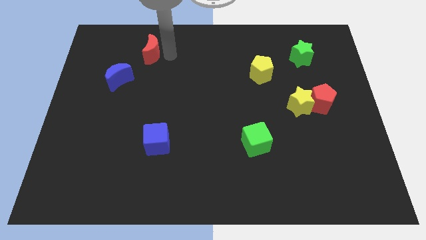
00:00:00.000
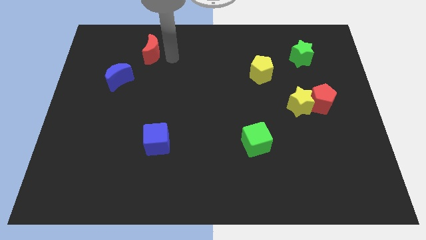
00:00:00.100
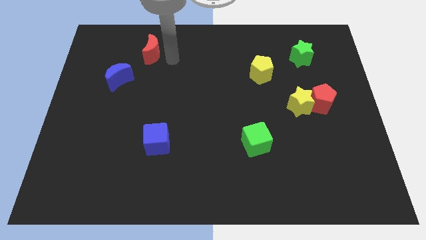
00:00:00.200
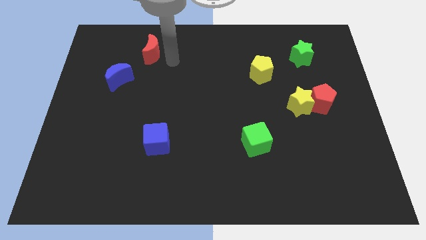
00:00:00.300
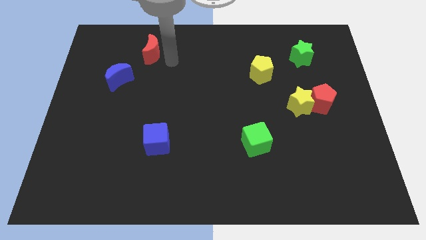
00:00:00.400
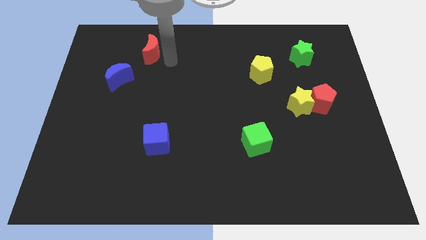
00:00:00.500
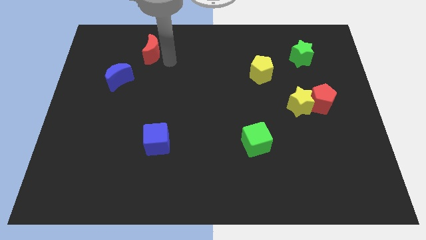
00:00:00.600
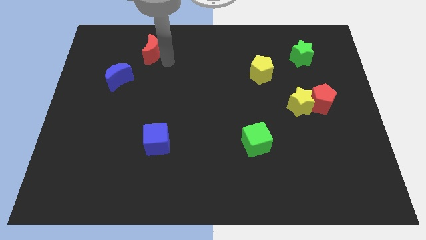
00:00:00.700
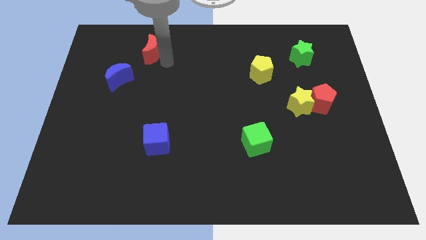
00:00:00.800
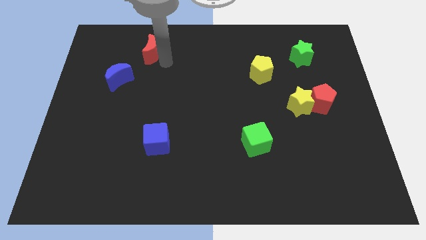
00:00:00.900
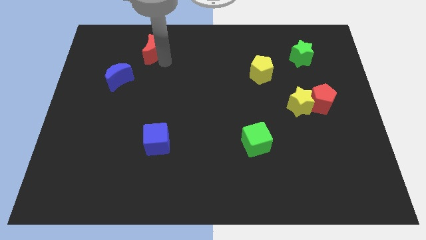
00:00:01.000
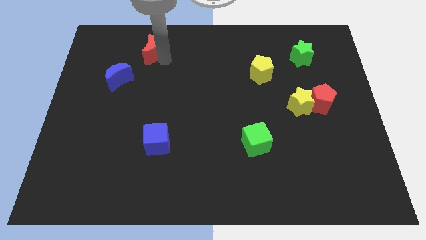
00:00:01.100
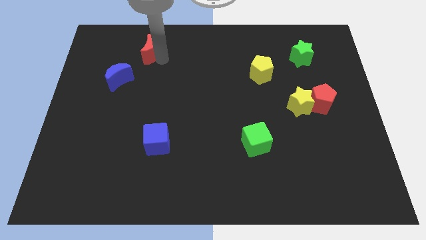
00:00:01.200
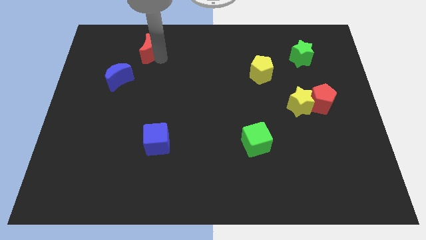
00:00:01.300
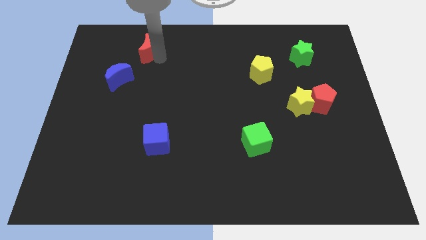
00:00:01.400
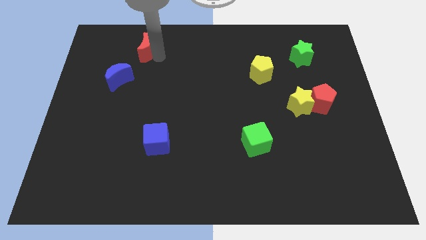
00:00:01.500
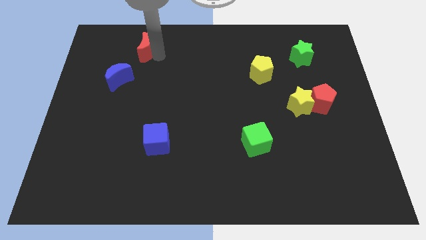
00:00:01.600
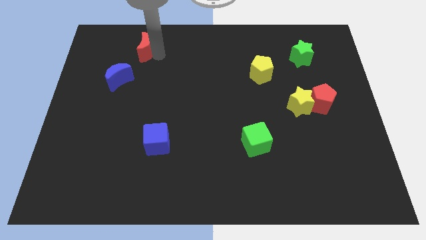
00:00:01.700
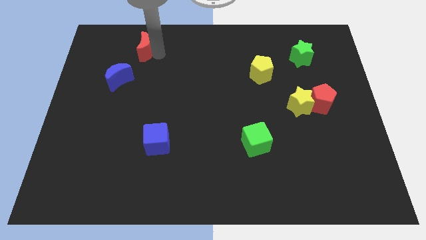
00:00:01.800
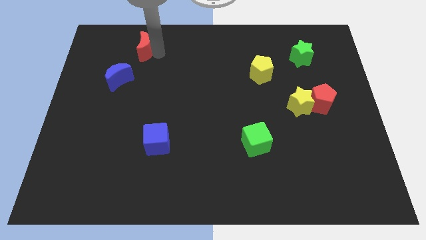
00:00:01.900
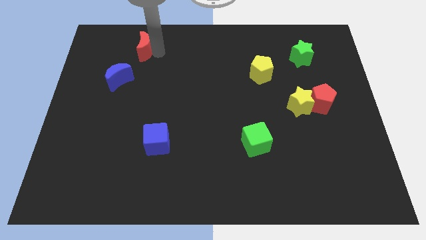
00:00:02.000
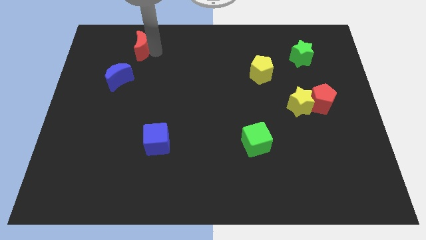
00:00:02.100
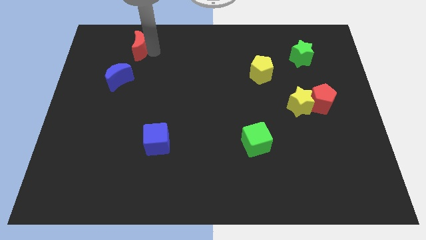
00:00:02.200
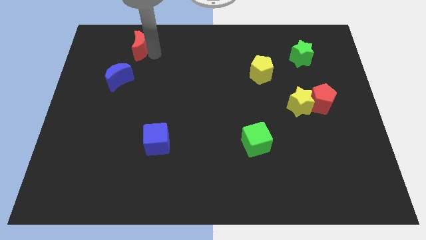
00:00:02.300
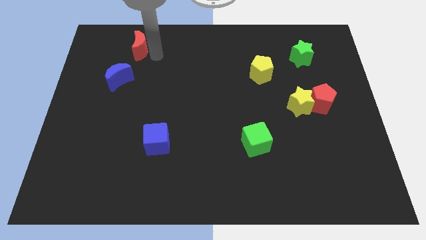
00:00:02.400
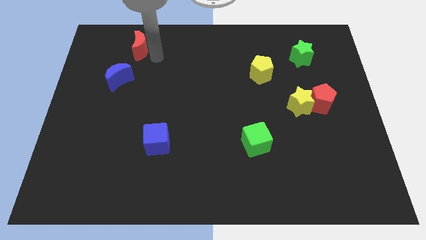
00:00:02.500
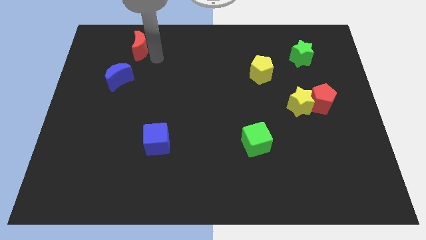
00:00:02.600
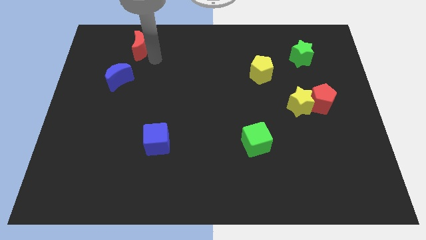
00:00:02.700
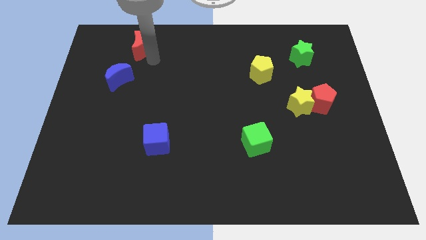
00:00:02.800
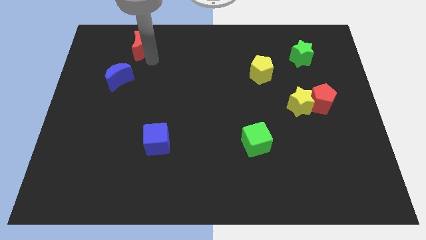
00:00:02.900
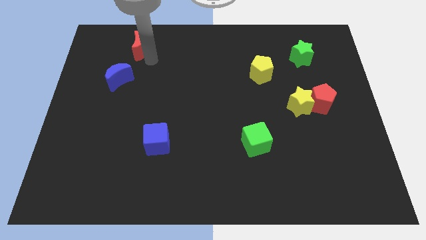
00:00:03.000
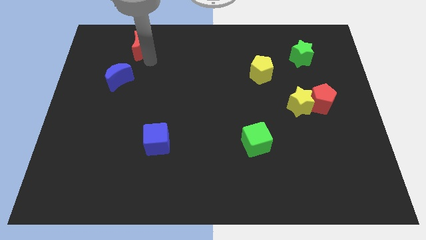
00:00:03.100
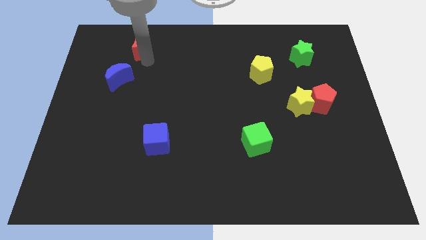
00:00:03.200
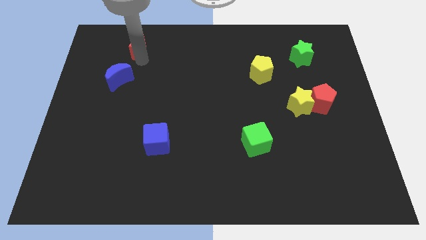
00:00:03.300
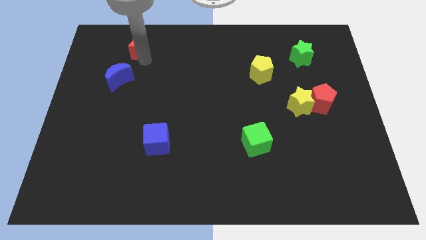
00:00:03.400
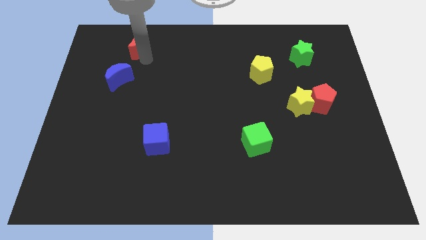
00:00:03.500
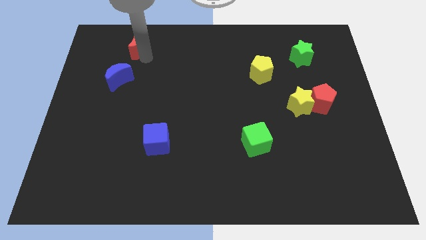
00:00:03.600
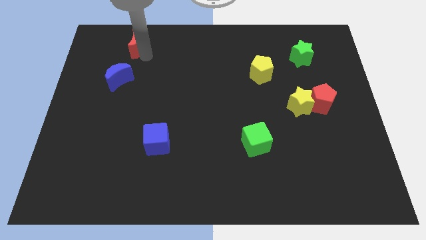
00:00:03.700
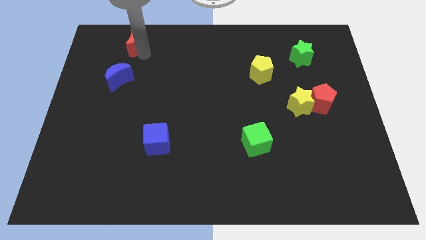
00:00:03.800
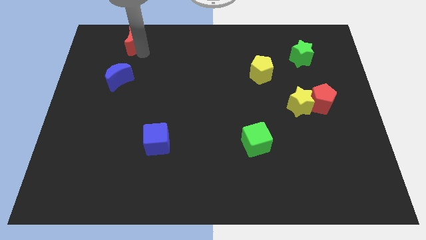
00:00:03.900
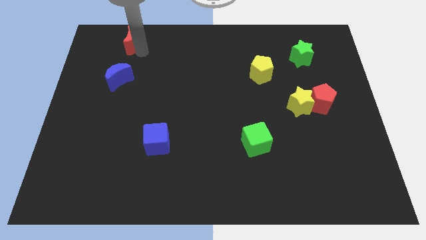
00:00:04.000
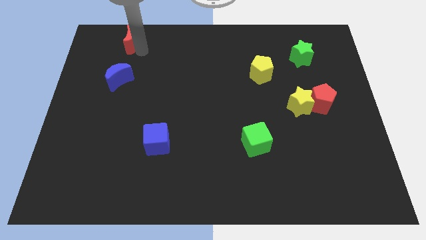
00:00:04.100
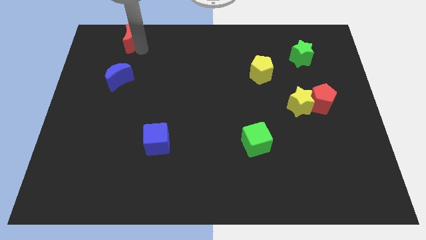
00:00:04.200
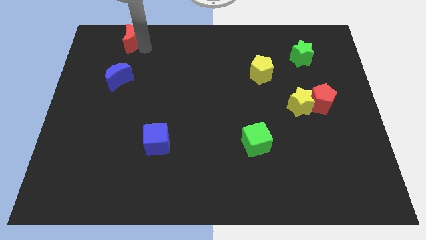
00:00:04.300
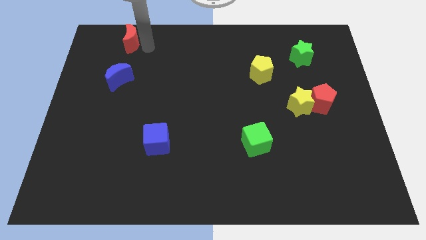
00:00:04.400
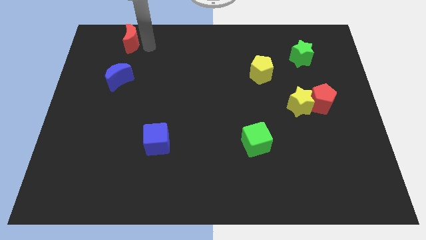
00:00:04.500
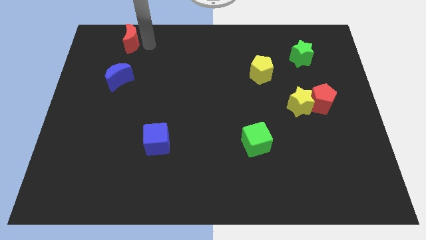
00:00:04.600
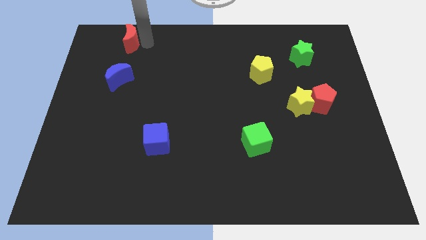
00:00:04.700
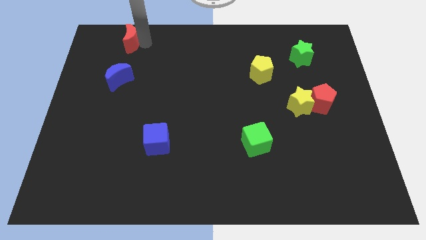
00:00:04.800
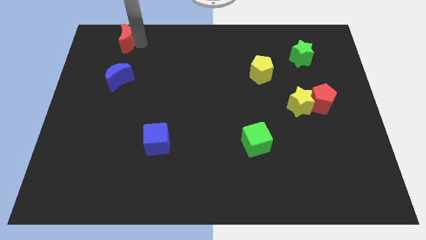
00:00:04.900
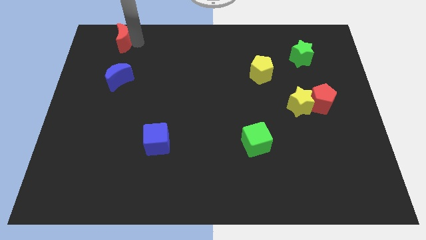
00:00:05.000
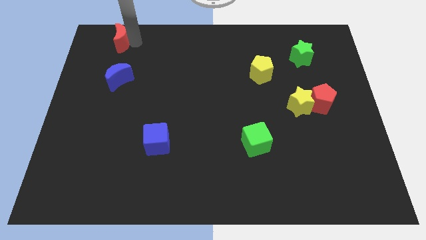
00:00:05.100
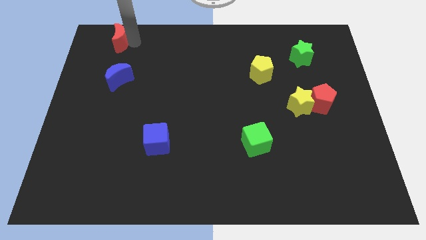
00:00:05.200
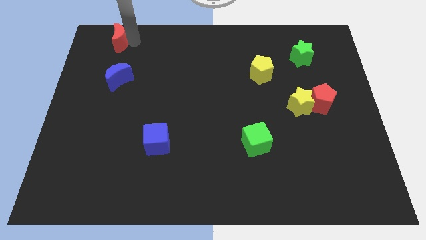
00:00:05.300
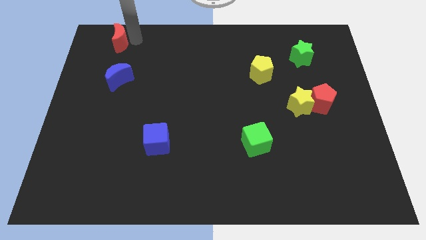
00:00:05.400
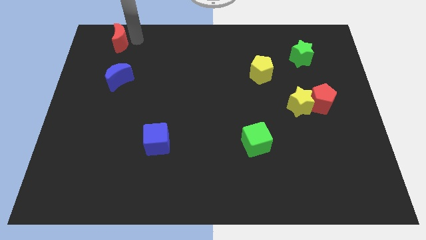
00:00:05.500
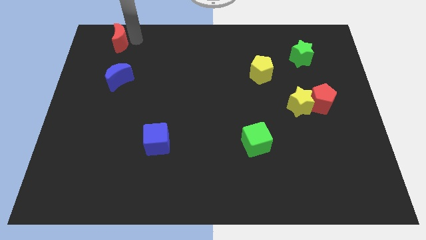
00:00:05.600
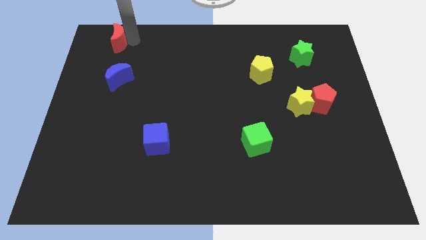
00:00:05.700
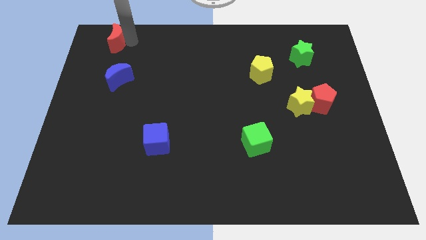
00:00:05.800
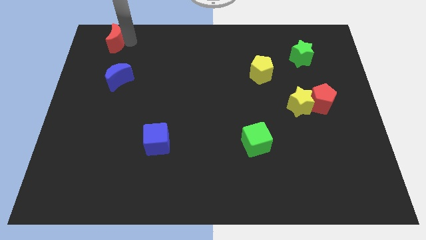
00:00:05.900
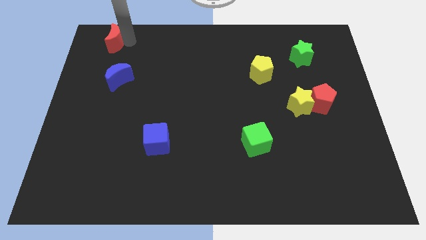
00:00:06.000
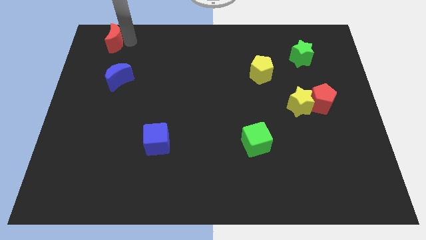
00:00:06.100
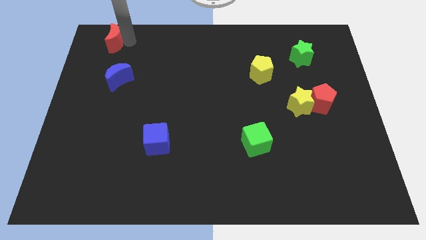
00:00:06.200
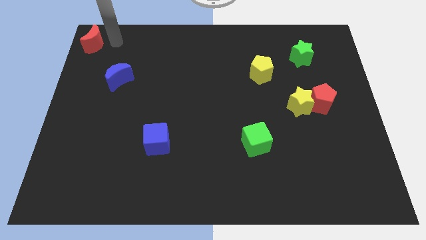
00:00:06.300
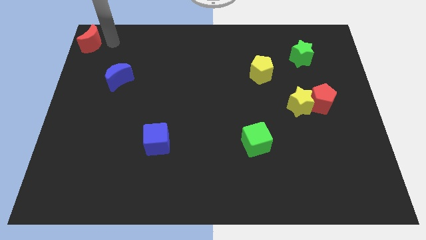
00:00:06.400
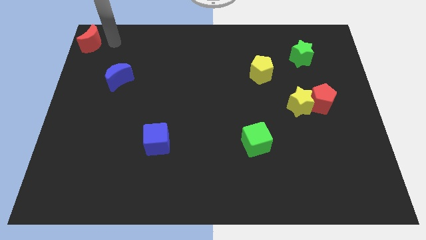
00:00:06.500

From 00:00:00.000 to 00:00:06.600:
push the red crescent to the top left corner of the board

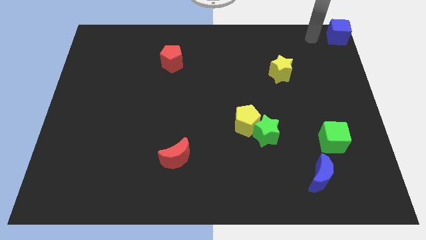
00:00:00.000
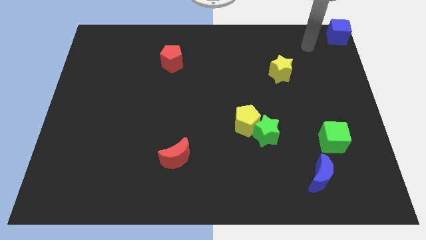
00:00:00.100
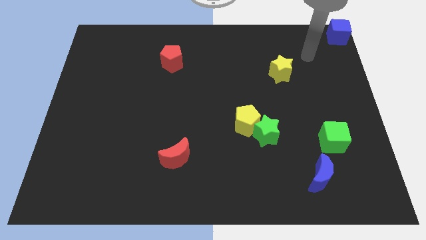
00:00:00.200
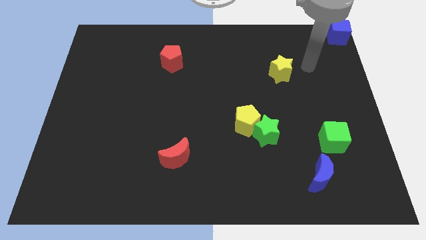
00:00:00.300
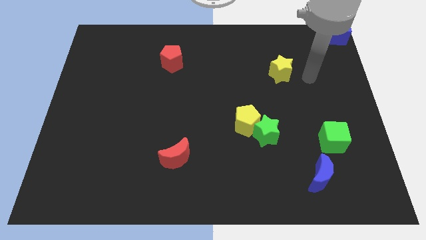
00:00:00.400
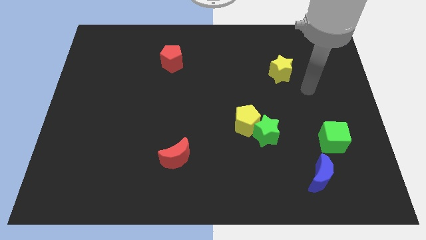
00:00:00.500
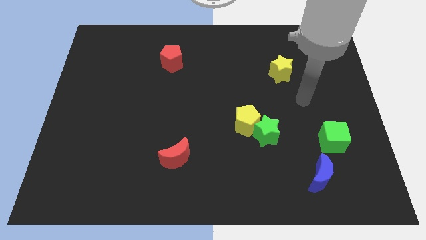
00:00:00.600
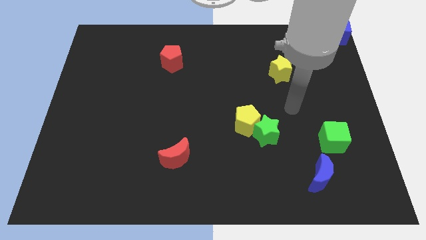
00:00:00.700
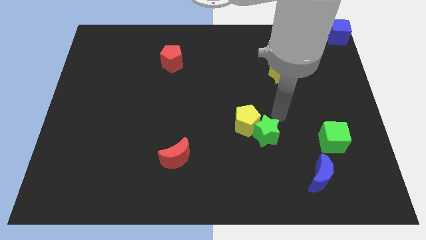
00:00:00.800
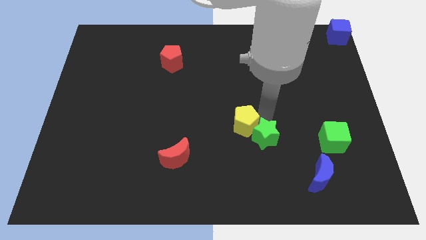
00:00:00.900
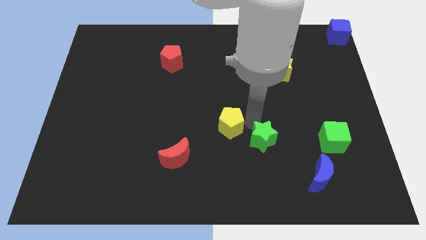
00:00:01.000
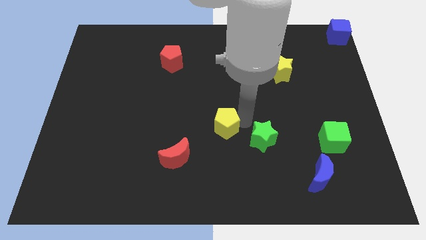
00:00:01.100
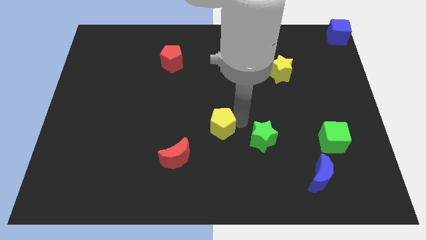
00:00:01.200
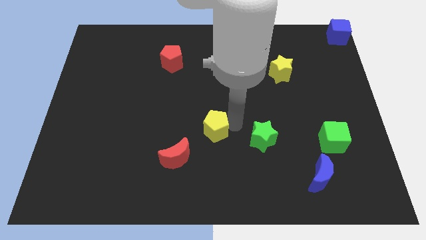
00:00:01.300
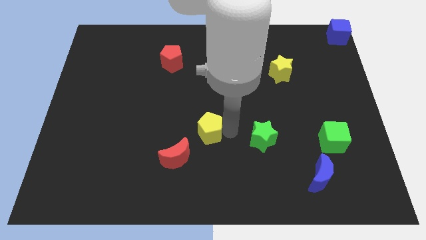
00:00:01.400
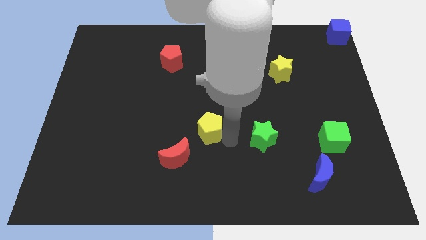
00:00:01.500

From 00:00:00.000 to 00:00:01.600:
push the yellow pentagon to the top right side of the red moon

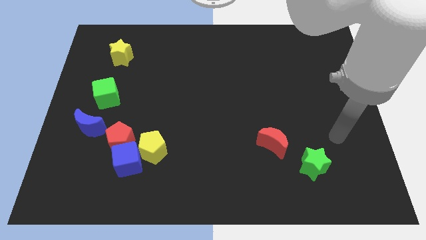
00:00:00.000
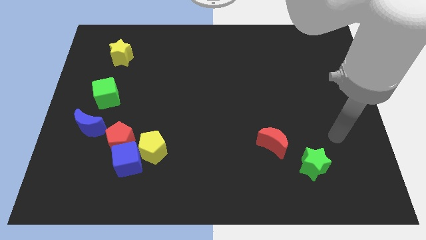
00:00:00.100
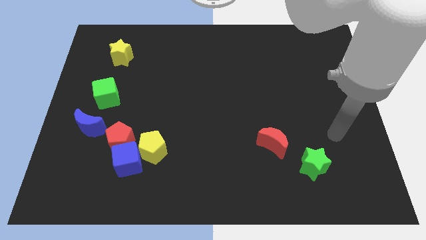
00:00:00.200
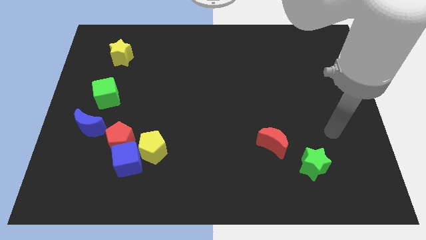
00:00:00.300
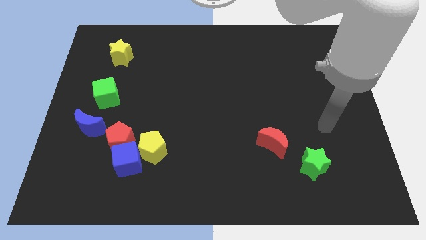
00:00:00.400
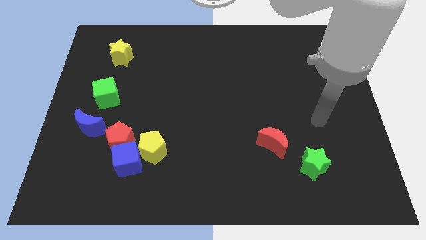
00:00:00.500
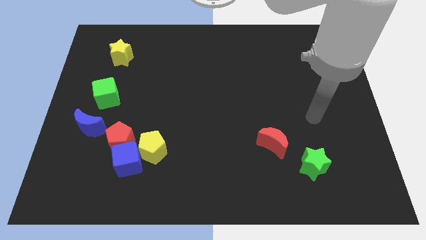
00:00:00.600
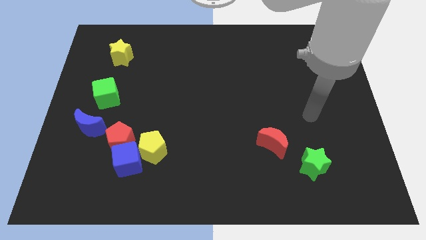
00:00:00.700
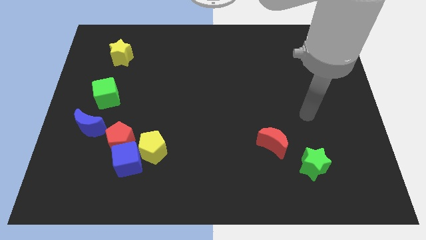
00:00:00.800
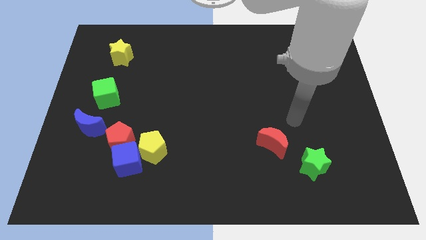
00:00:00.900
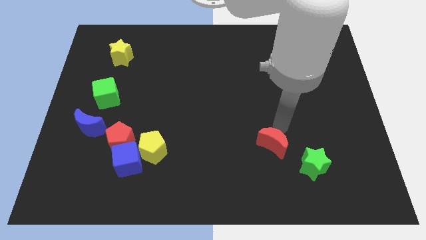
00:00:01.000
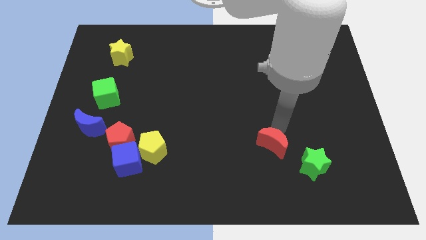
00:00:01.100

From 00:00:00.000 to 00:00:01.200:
place your arm at the top right side of red crescent
